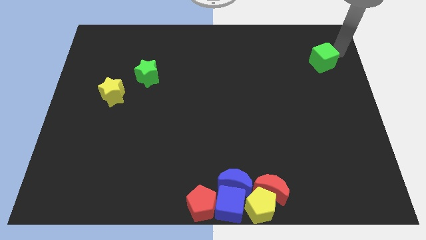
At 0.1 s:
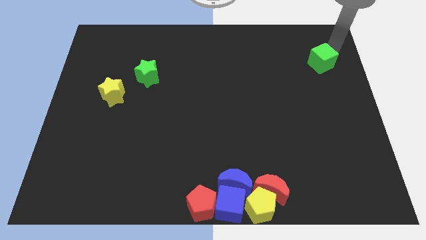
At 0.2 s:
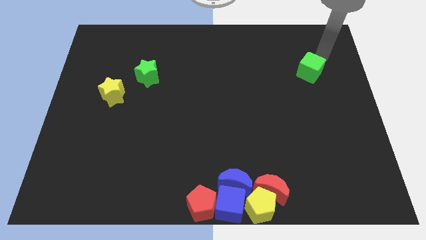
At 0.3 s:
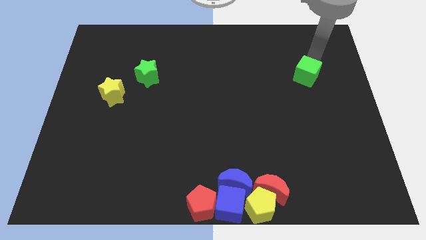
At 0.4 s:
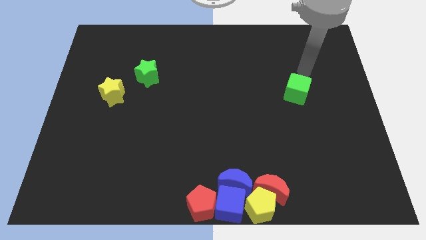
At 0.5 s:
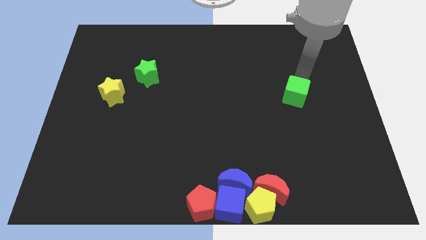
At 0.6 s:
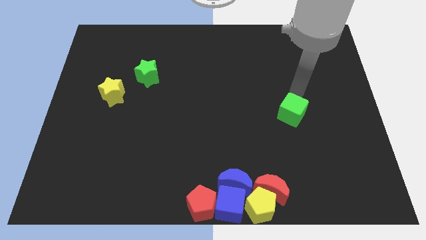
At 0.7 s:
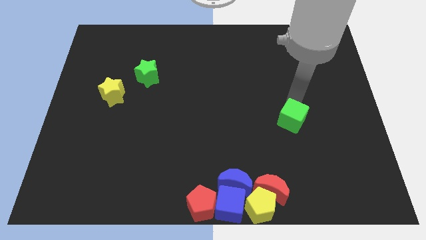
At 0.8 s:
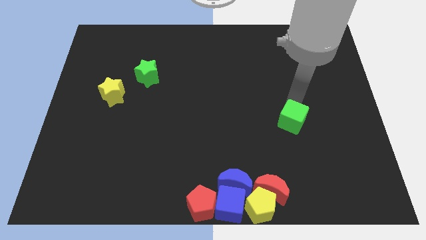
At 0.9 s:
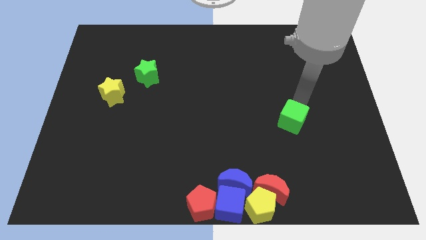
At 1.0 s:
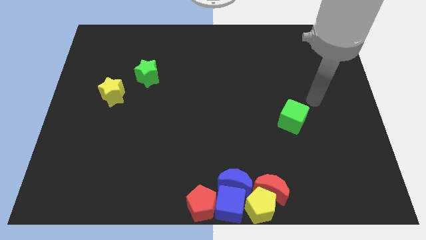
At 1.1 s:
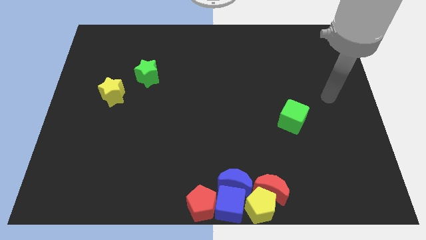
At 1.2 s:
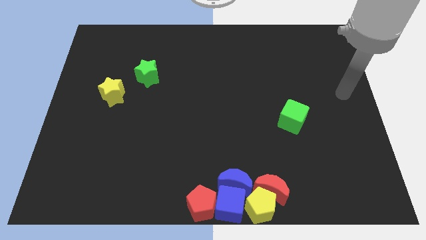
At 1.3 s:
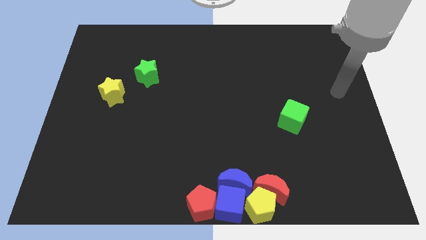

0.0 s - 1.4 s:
push the green cube downward

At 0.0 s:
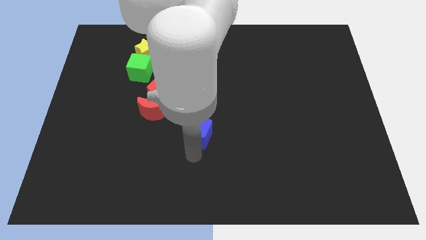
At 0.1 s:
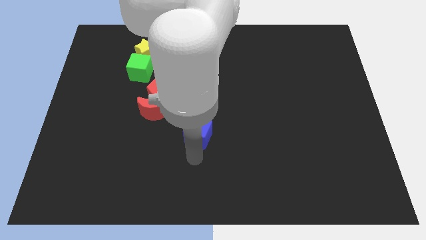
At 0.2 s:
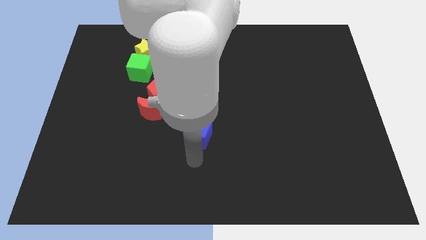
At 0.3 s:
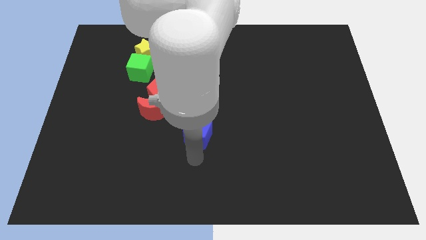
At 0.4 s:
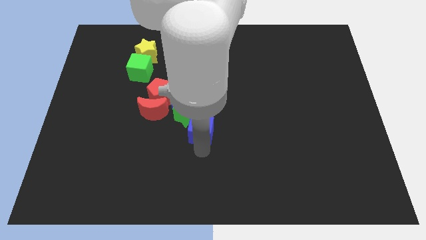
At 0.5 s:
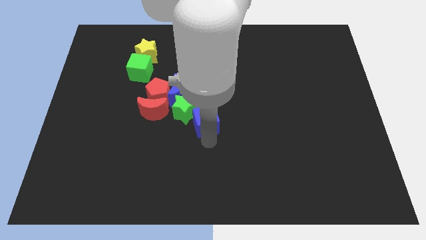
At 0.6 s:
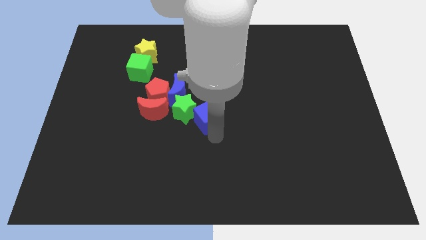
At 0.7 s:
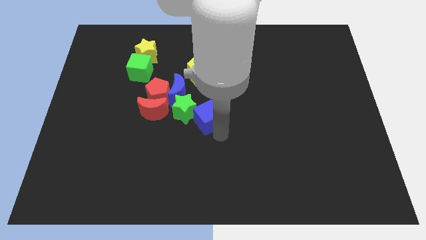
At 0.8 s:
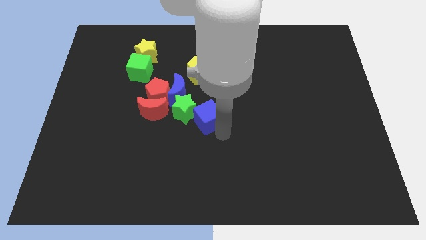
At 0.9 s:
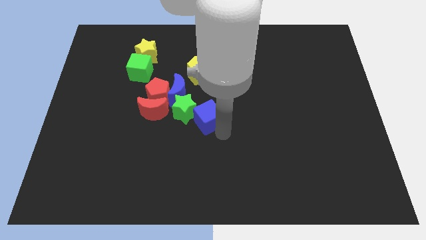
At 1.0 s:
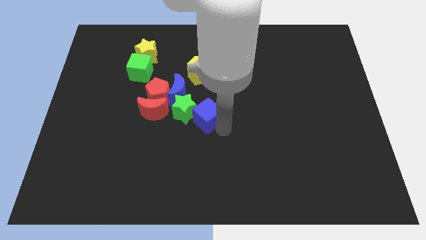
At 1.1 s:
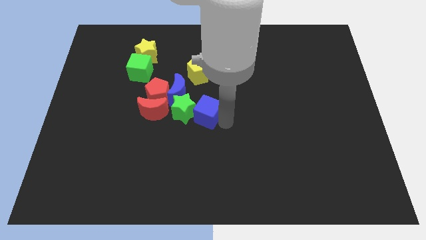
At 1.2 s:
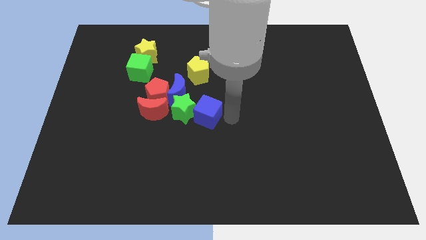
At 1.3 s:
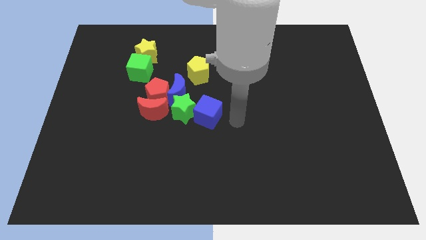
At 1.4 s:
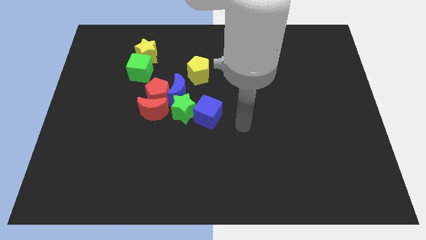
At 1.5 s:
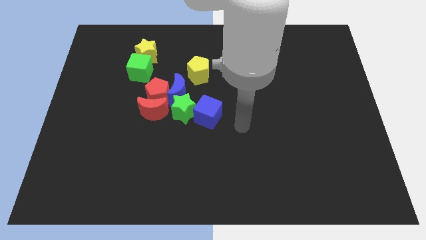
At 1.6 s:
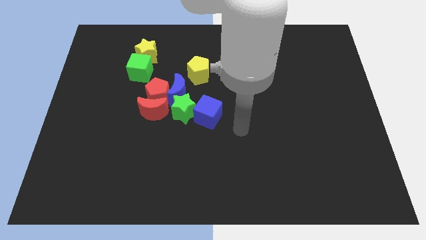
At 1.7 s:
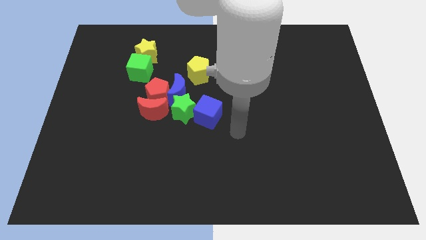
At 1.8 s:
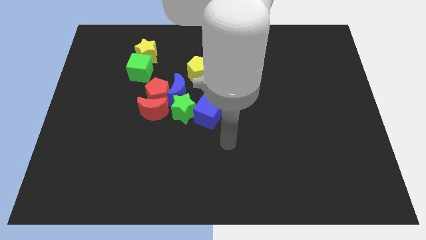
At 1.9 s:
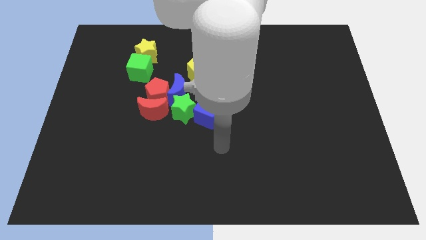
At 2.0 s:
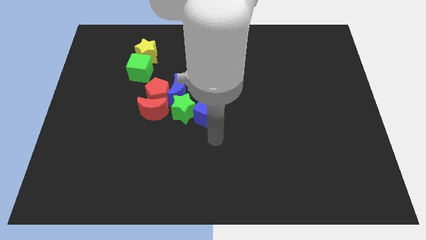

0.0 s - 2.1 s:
move the blue cube to the right of the green star

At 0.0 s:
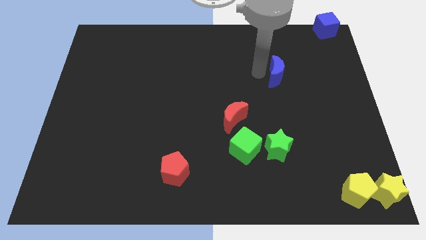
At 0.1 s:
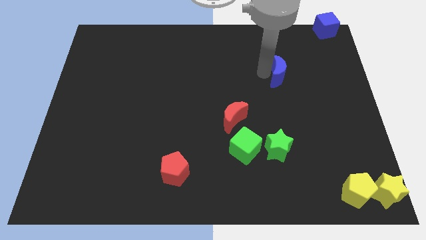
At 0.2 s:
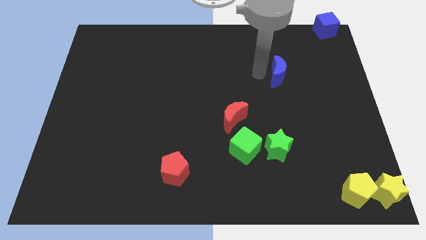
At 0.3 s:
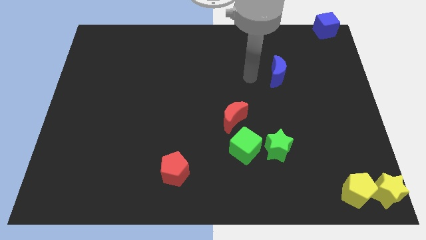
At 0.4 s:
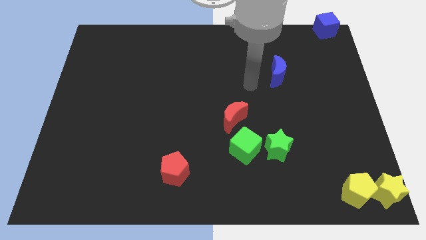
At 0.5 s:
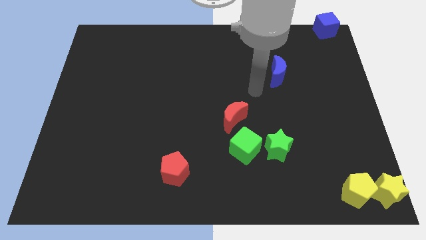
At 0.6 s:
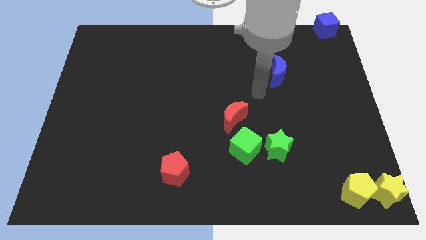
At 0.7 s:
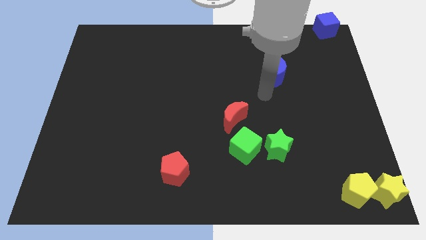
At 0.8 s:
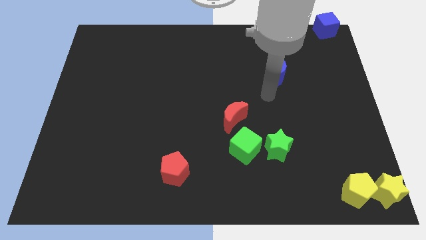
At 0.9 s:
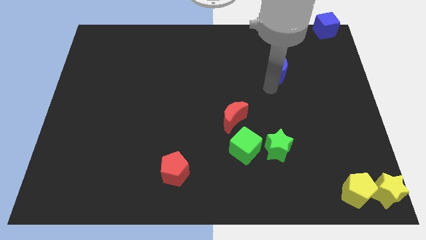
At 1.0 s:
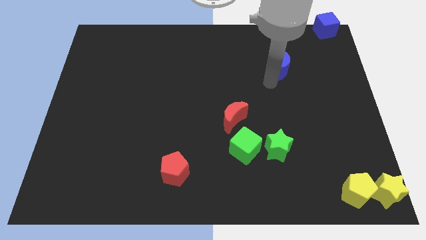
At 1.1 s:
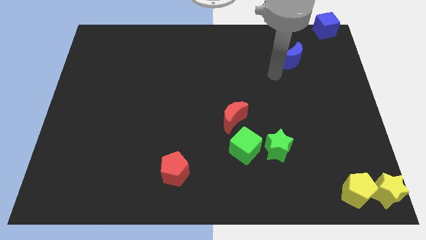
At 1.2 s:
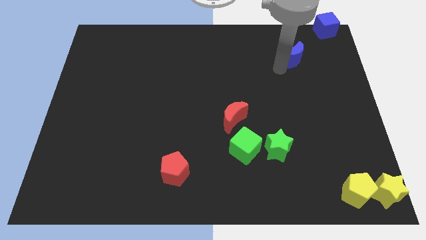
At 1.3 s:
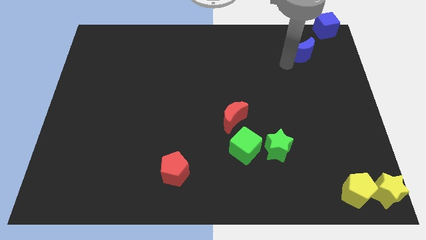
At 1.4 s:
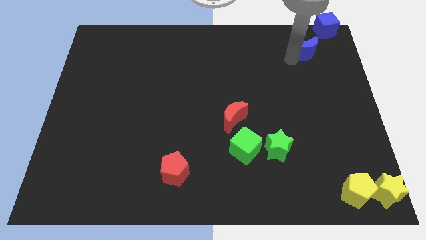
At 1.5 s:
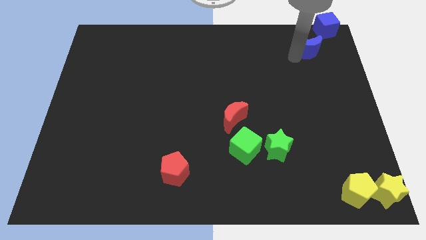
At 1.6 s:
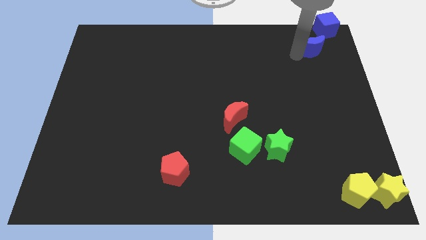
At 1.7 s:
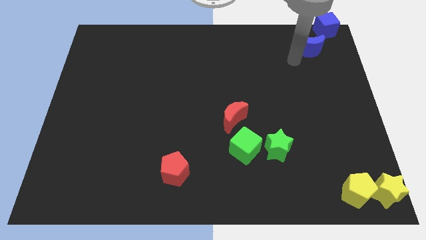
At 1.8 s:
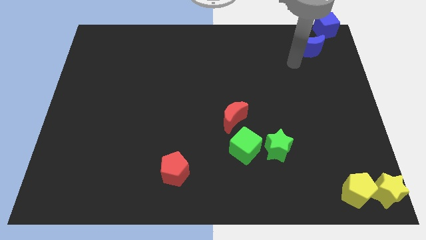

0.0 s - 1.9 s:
push the blue crescent towards the blue cube

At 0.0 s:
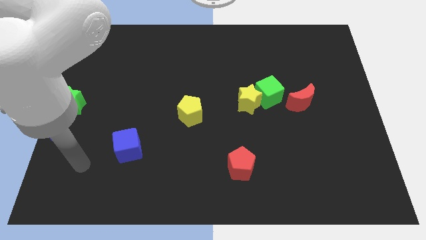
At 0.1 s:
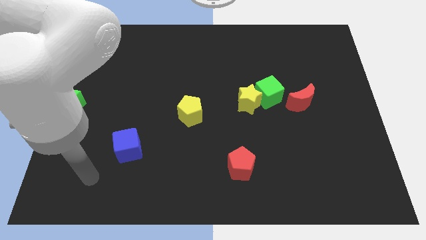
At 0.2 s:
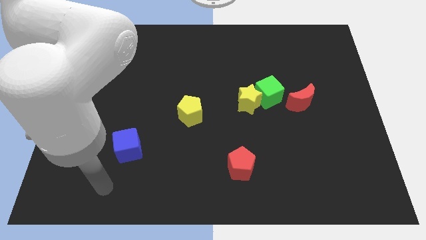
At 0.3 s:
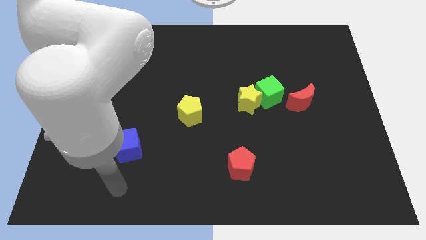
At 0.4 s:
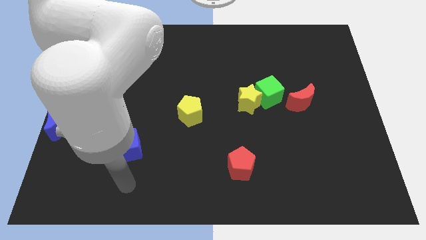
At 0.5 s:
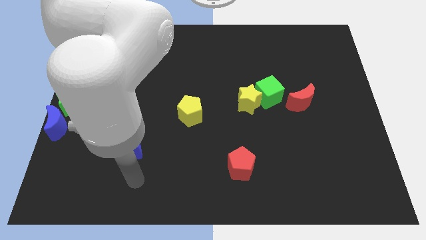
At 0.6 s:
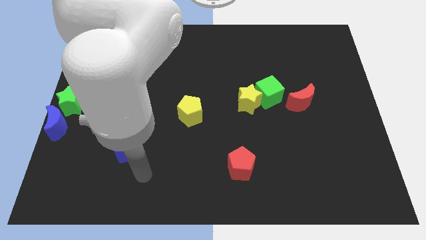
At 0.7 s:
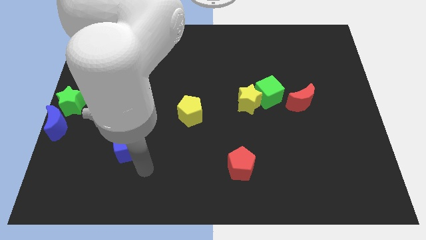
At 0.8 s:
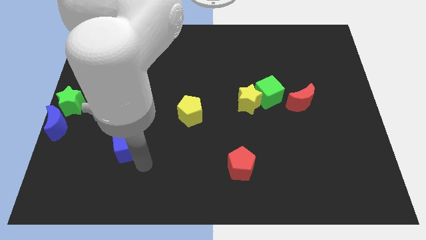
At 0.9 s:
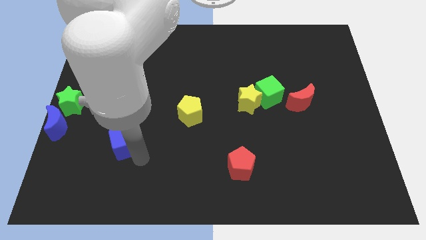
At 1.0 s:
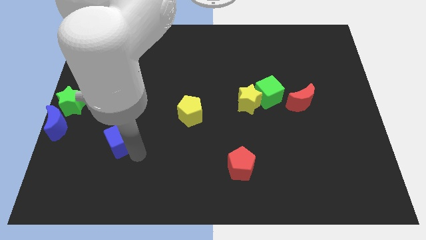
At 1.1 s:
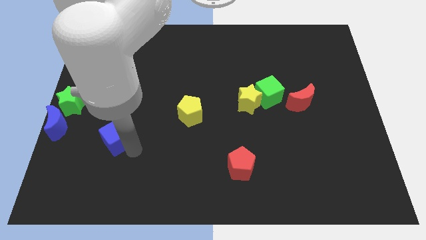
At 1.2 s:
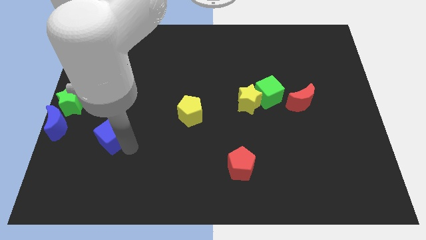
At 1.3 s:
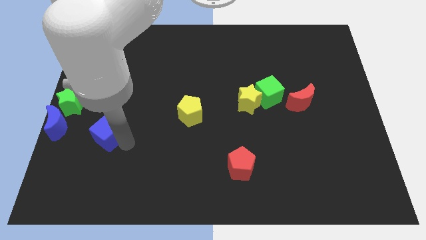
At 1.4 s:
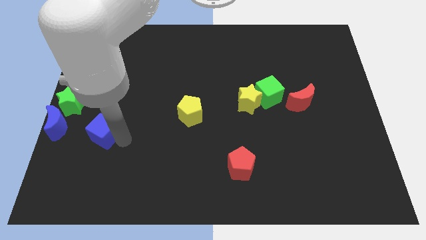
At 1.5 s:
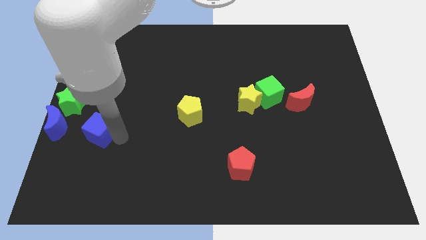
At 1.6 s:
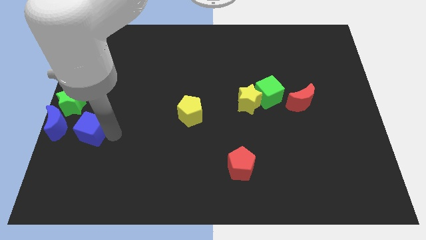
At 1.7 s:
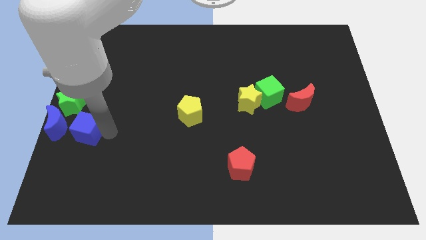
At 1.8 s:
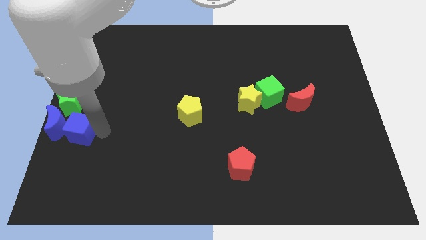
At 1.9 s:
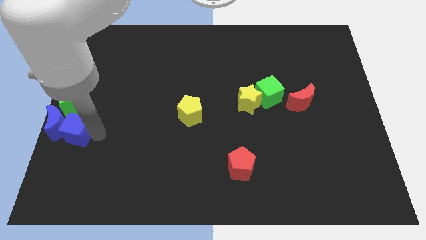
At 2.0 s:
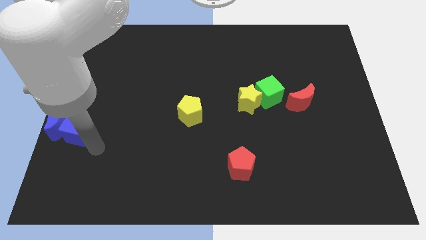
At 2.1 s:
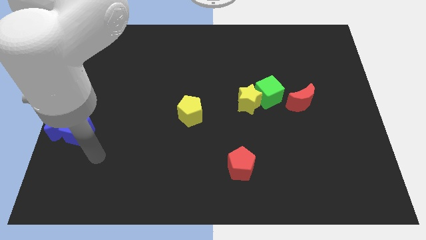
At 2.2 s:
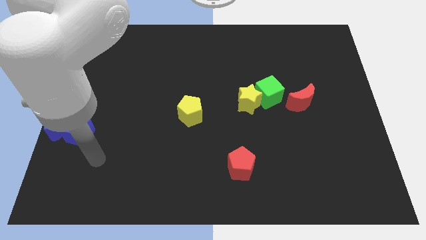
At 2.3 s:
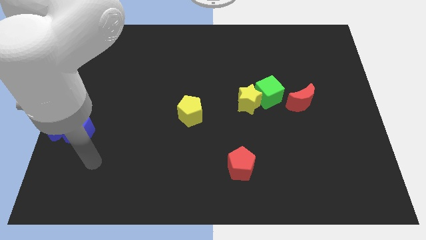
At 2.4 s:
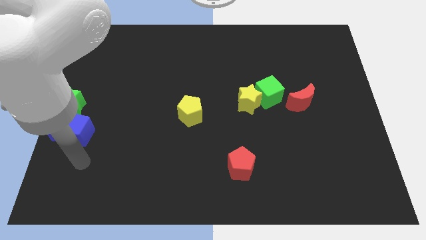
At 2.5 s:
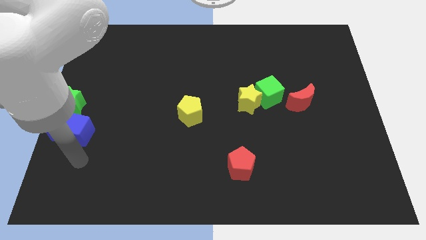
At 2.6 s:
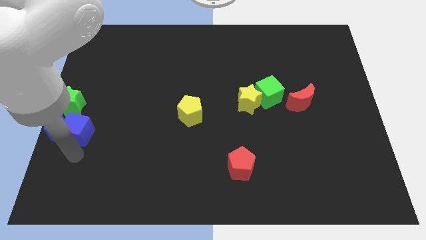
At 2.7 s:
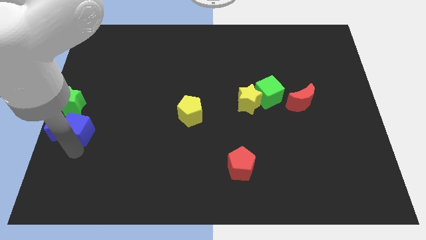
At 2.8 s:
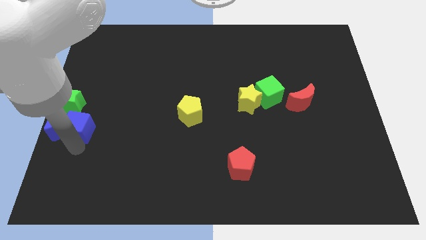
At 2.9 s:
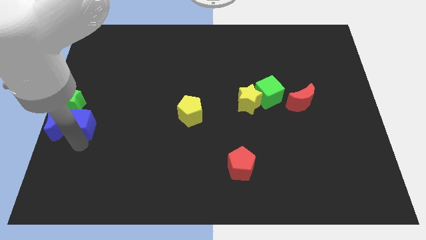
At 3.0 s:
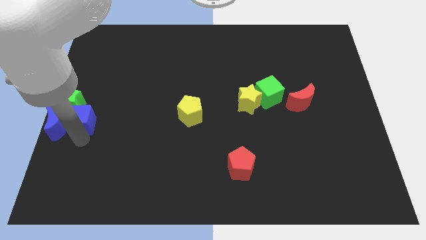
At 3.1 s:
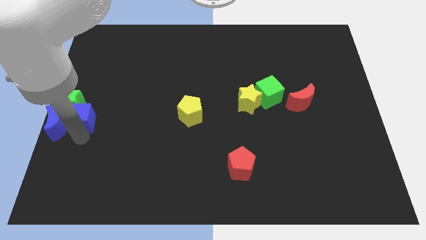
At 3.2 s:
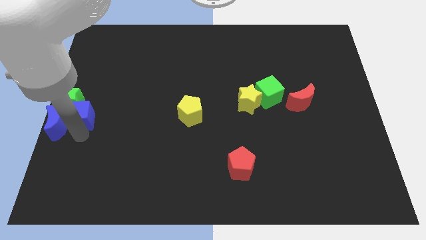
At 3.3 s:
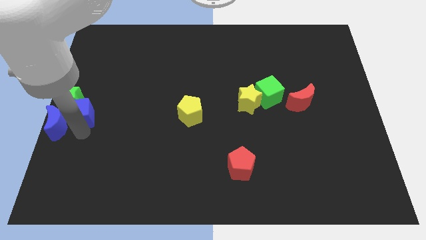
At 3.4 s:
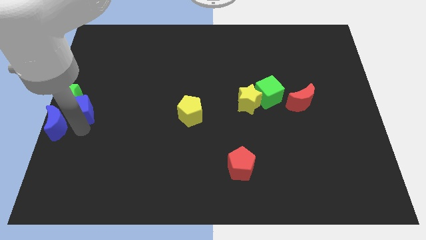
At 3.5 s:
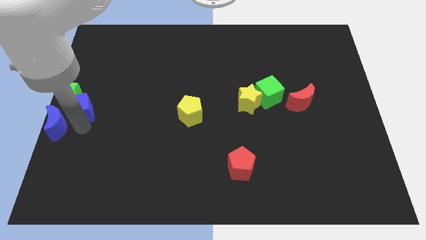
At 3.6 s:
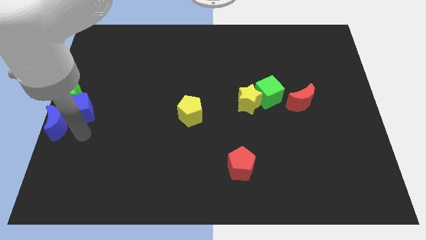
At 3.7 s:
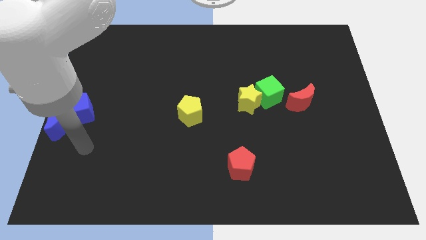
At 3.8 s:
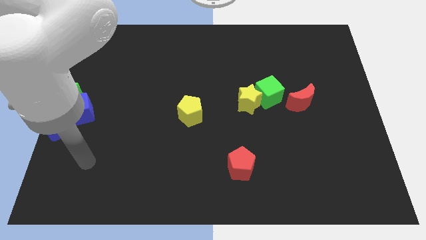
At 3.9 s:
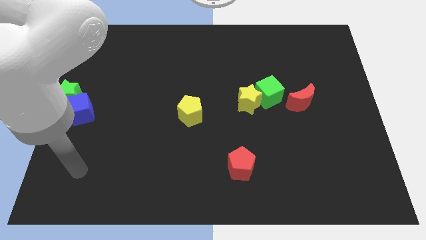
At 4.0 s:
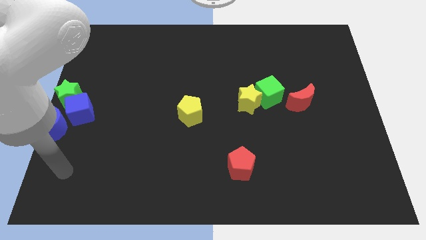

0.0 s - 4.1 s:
move blue cube into green star
